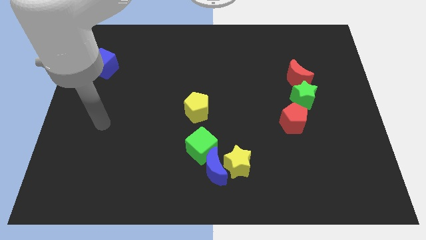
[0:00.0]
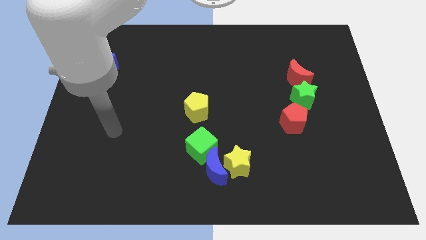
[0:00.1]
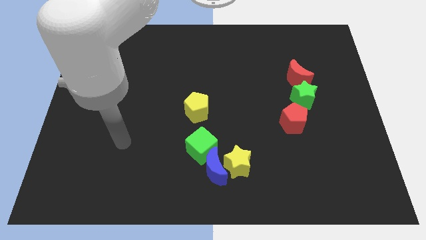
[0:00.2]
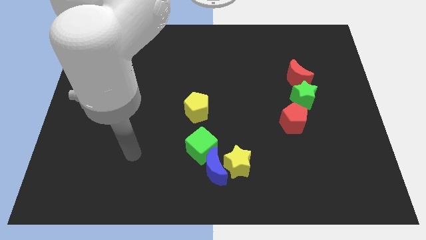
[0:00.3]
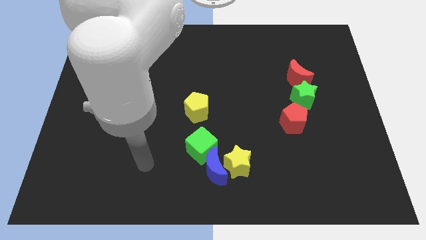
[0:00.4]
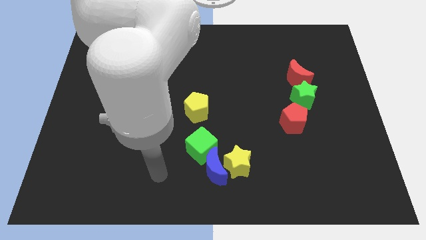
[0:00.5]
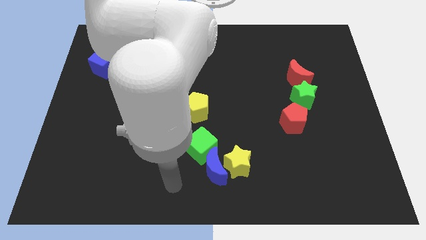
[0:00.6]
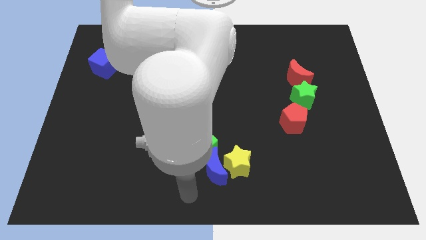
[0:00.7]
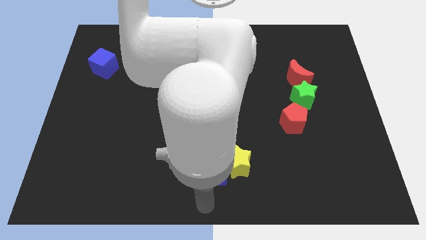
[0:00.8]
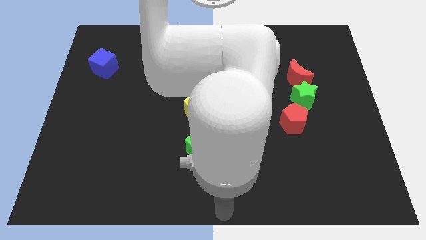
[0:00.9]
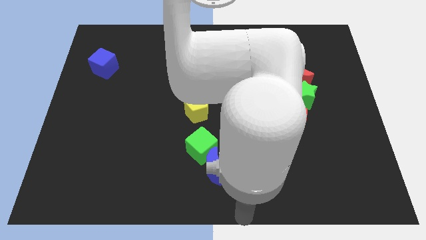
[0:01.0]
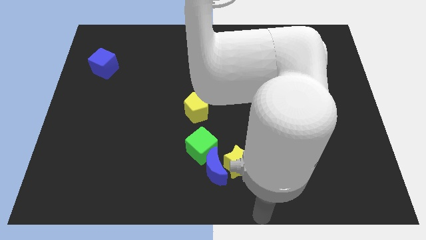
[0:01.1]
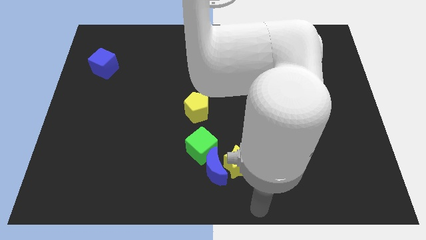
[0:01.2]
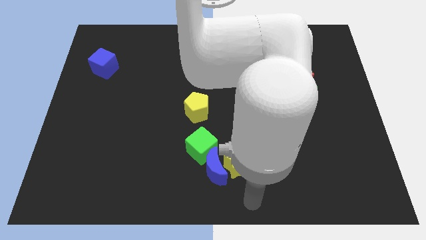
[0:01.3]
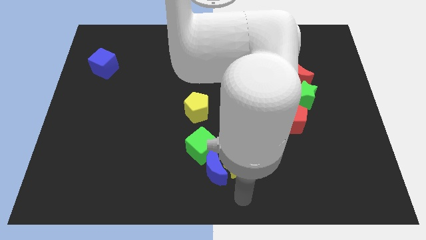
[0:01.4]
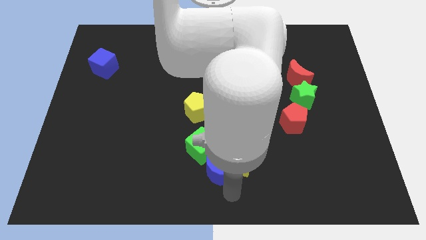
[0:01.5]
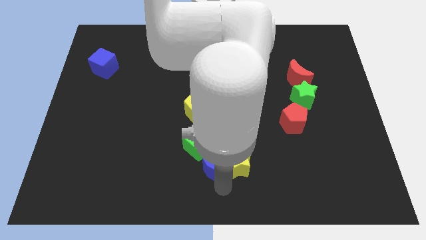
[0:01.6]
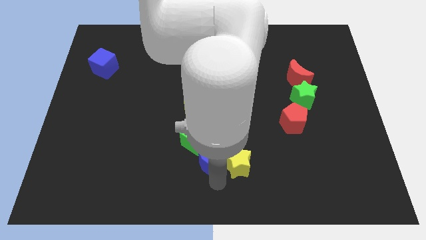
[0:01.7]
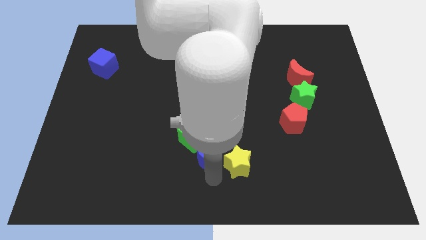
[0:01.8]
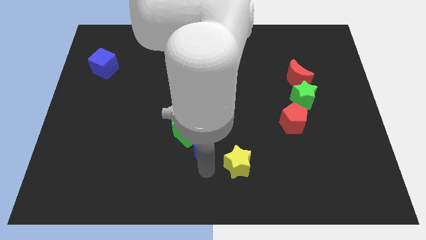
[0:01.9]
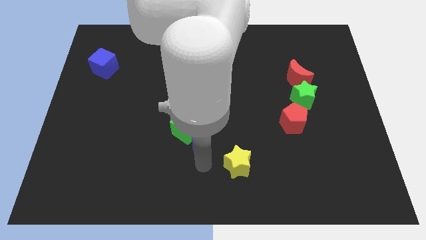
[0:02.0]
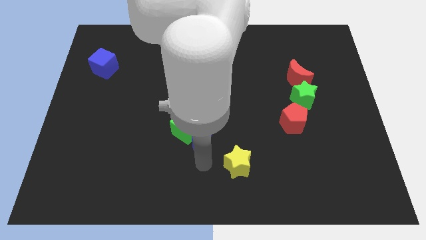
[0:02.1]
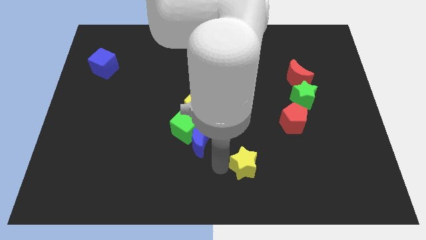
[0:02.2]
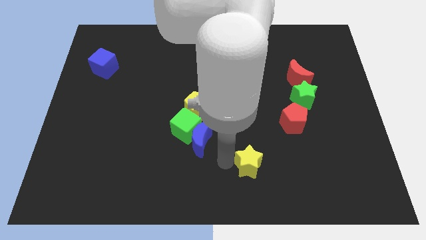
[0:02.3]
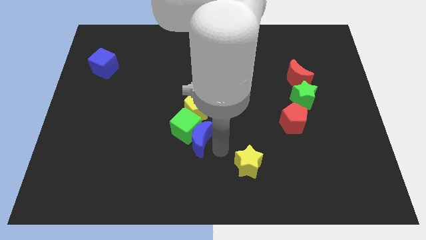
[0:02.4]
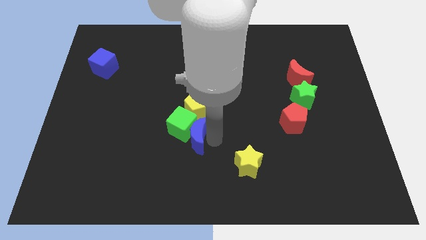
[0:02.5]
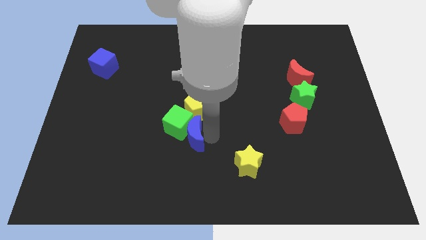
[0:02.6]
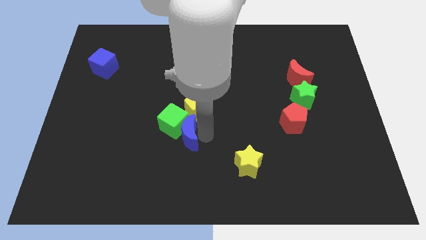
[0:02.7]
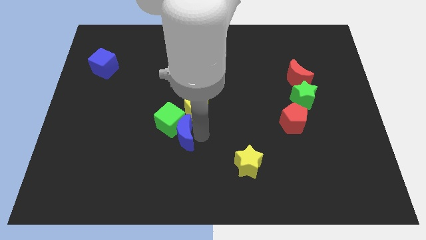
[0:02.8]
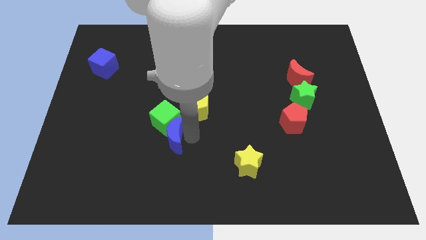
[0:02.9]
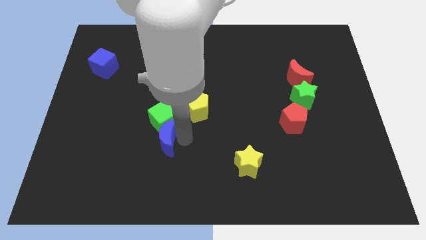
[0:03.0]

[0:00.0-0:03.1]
push the blue crescent with green cube towards left to the yellow pentagon

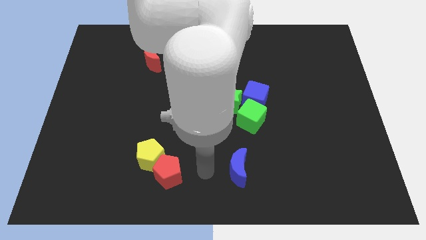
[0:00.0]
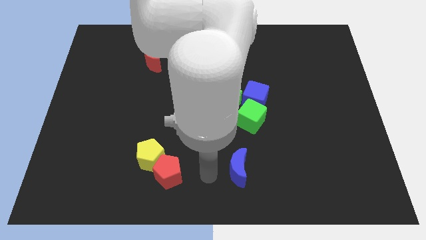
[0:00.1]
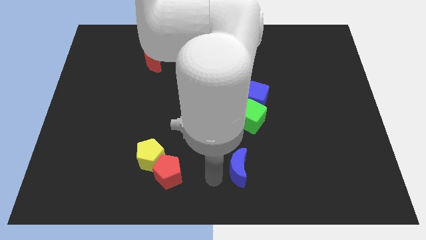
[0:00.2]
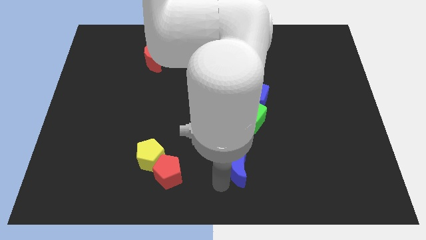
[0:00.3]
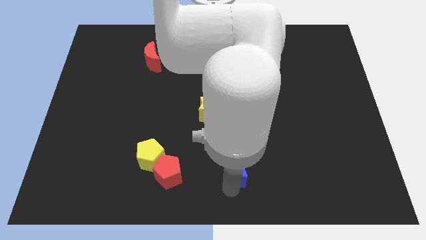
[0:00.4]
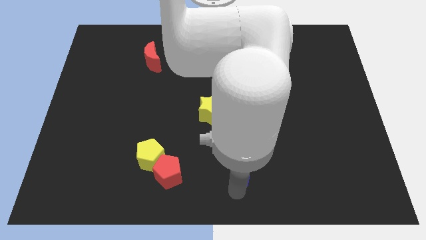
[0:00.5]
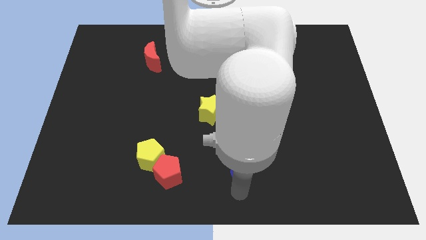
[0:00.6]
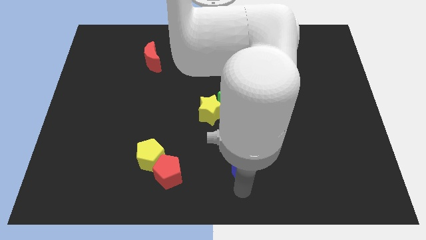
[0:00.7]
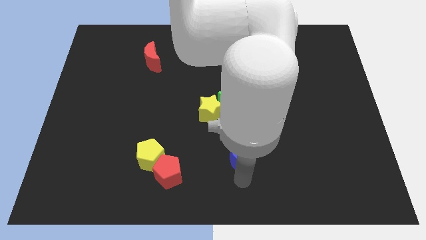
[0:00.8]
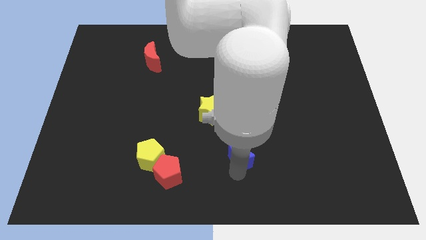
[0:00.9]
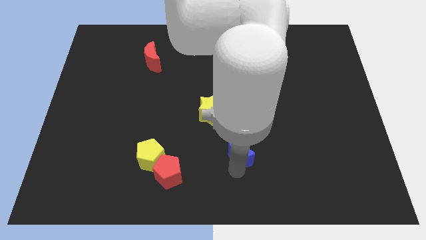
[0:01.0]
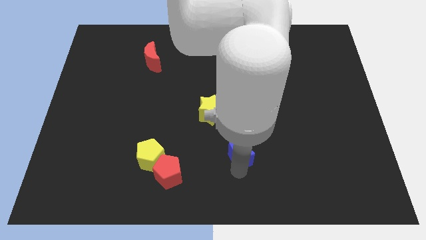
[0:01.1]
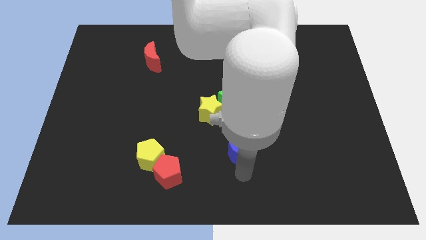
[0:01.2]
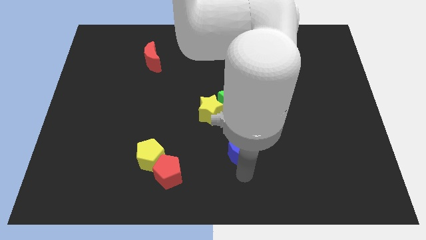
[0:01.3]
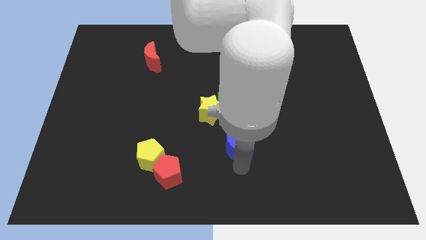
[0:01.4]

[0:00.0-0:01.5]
push the blue moon upwards

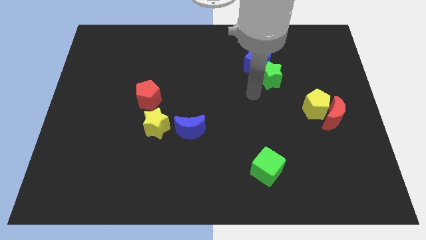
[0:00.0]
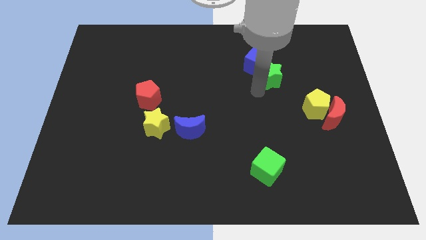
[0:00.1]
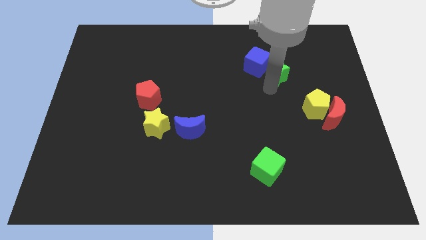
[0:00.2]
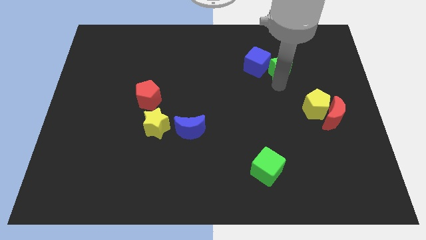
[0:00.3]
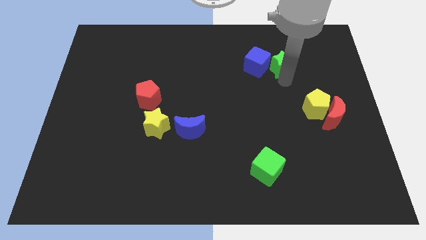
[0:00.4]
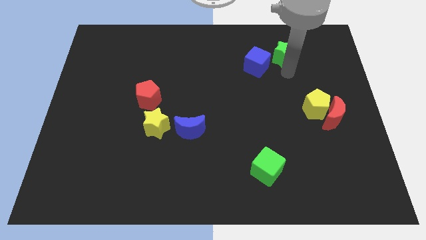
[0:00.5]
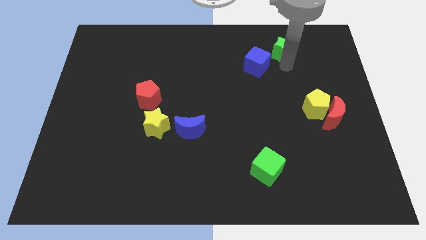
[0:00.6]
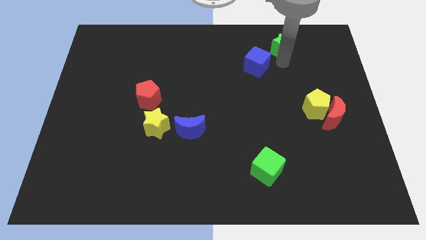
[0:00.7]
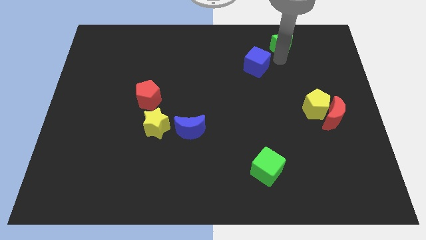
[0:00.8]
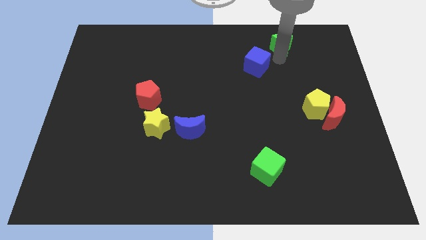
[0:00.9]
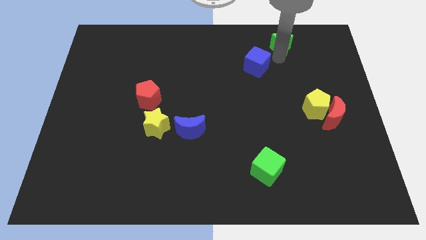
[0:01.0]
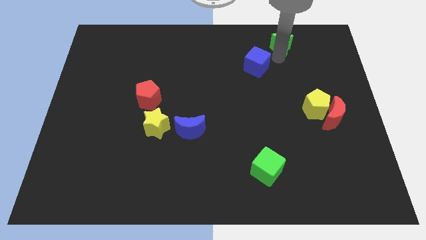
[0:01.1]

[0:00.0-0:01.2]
separate the green star from the blue cube

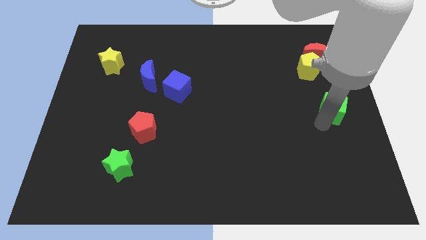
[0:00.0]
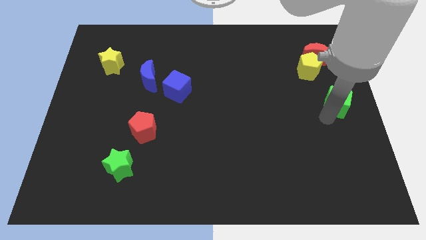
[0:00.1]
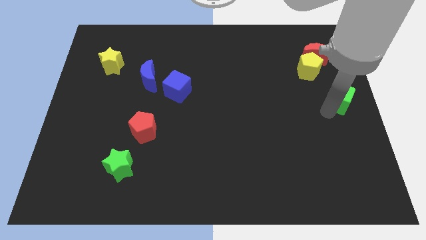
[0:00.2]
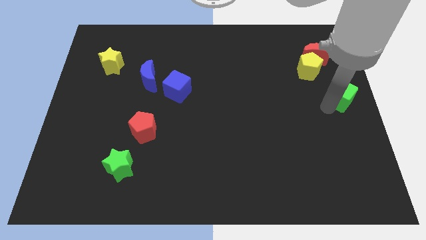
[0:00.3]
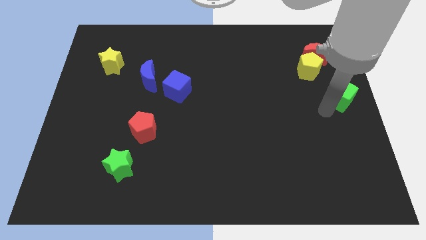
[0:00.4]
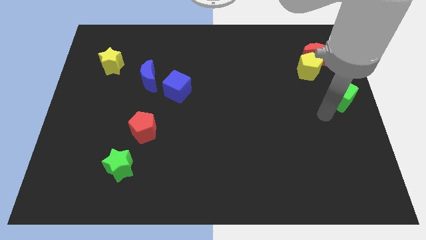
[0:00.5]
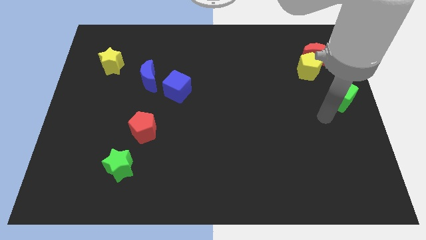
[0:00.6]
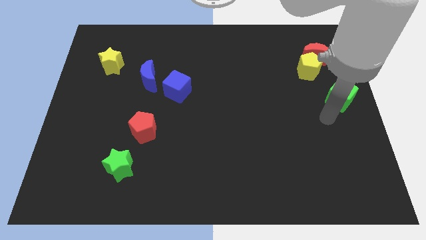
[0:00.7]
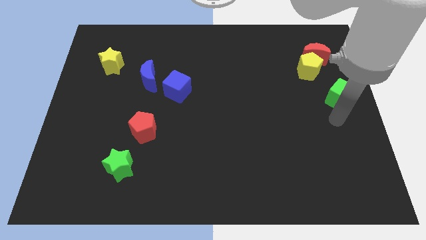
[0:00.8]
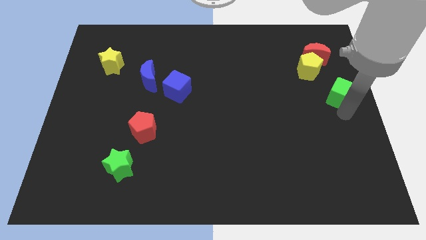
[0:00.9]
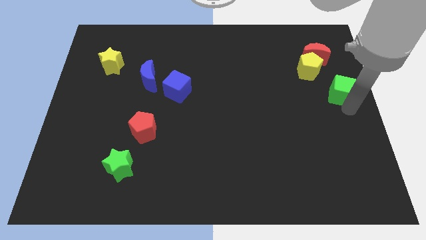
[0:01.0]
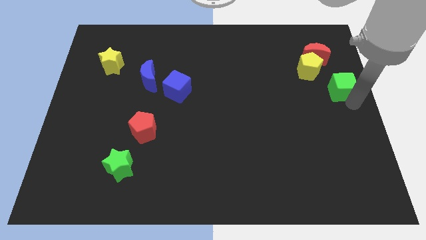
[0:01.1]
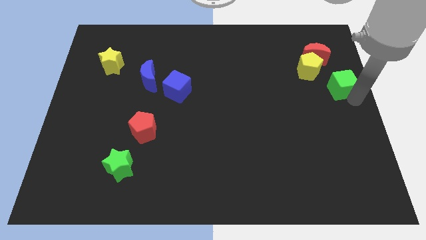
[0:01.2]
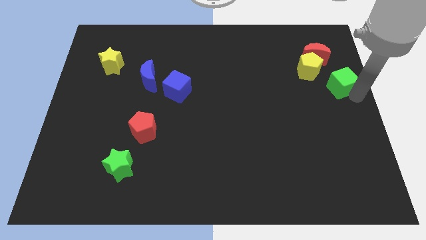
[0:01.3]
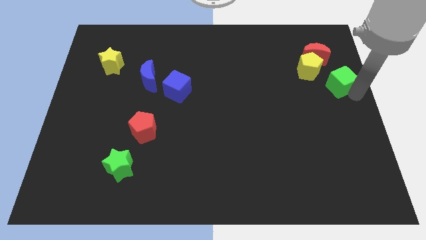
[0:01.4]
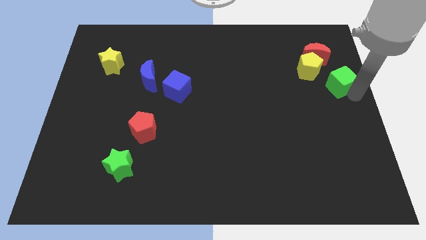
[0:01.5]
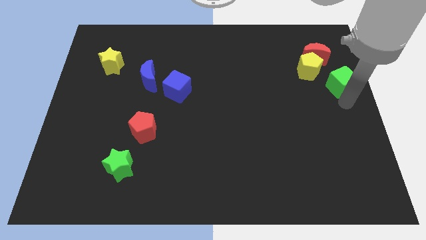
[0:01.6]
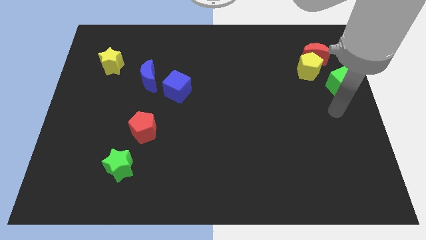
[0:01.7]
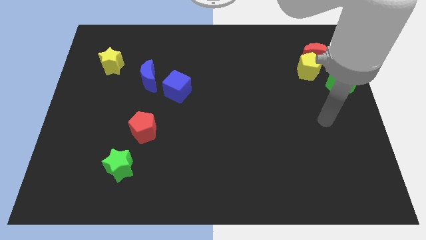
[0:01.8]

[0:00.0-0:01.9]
push the green cube to the right side of the yellow pentagon

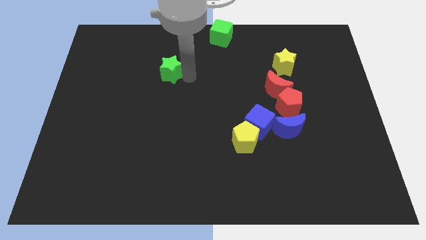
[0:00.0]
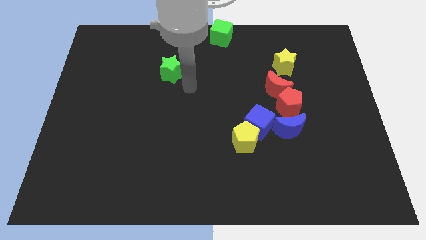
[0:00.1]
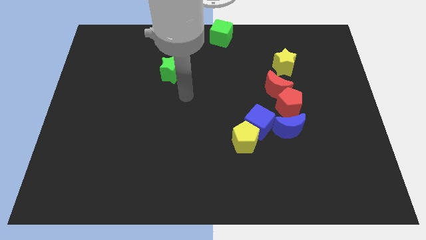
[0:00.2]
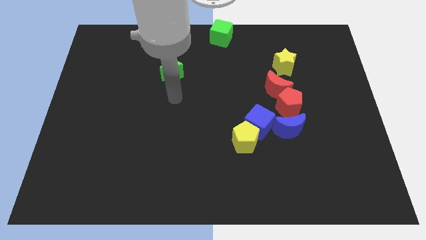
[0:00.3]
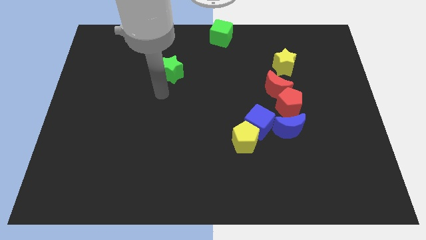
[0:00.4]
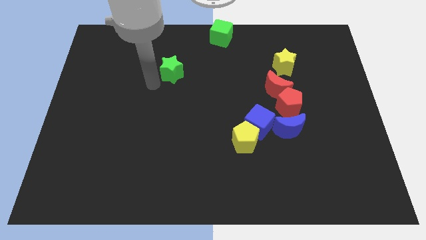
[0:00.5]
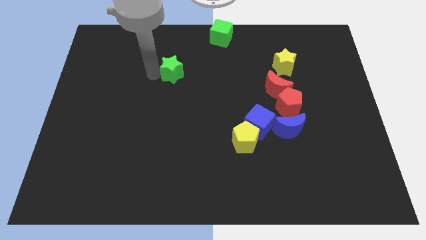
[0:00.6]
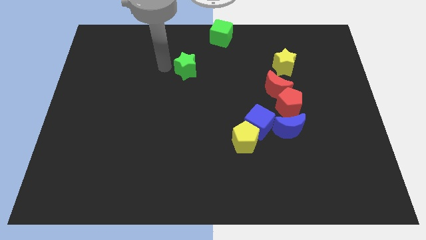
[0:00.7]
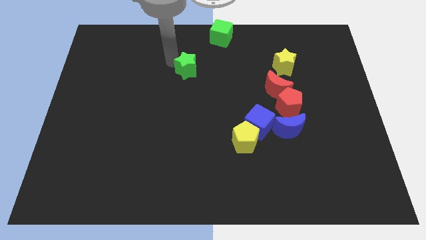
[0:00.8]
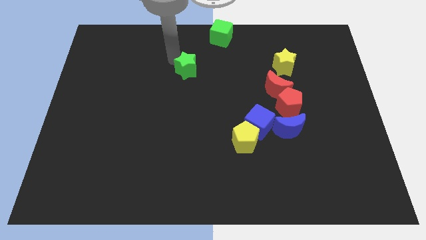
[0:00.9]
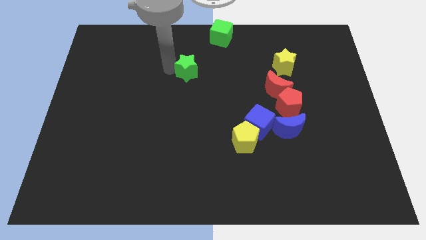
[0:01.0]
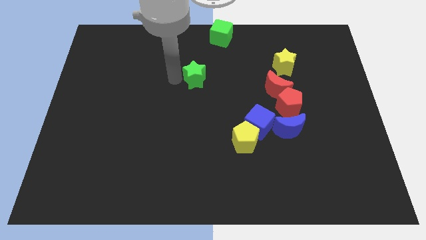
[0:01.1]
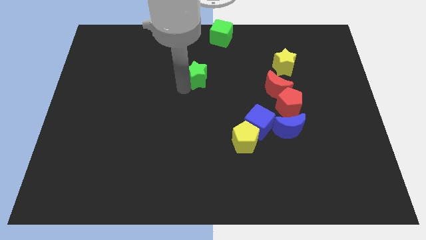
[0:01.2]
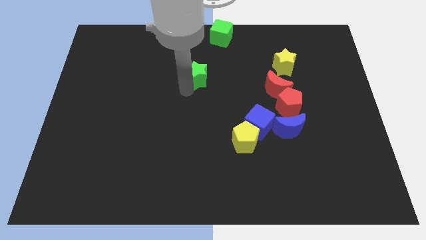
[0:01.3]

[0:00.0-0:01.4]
move the green star to the top center of the board
